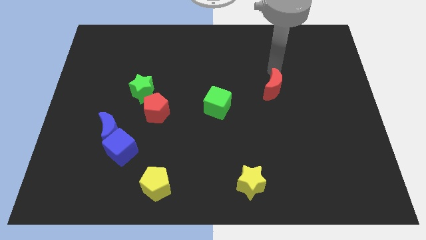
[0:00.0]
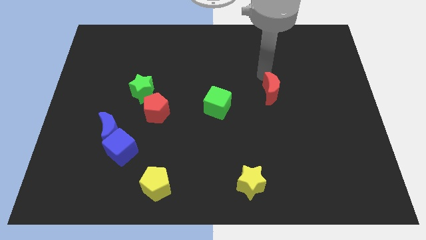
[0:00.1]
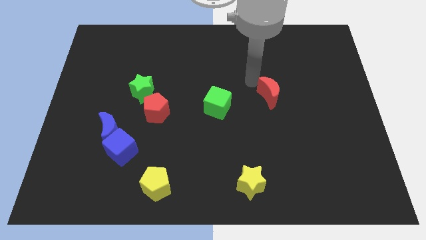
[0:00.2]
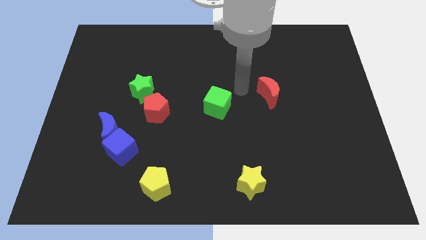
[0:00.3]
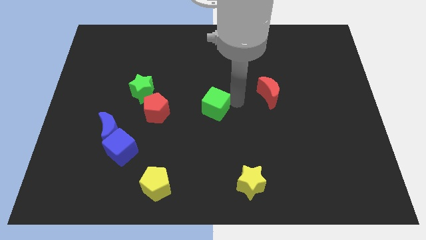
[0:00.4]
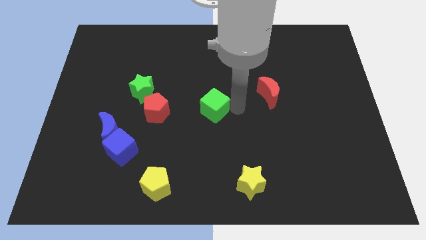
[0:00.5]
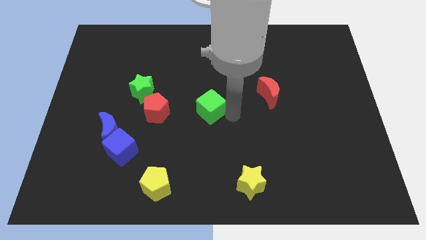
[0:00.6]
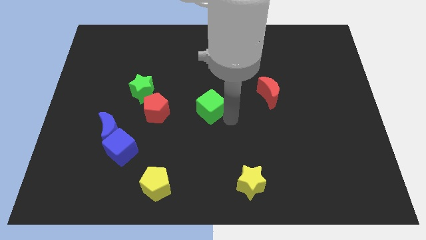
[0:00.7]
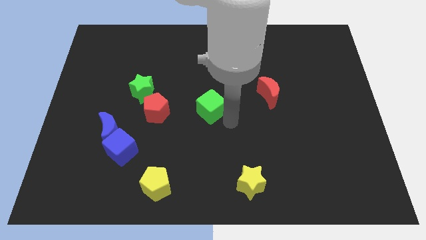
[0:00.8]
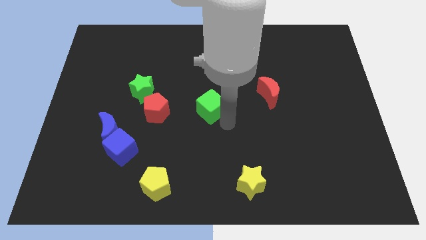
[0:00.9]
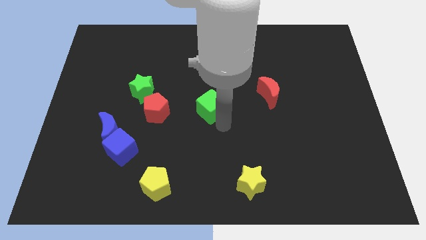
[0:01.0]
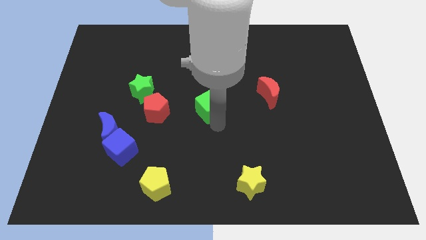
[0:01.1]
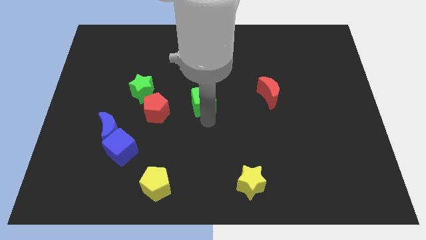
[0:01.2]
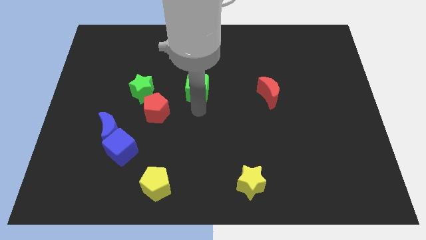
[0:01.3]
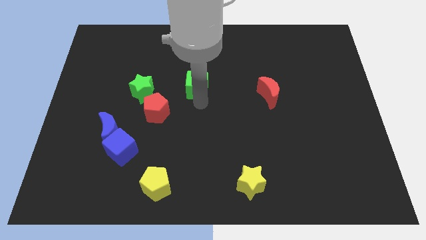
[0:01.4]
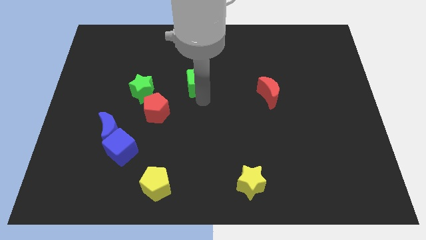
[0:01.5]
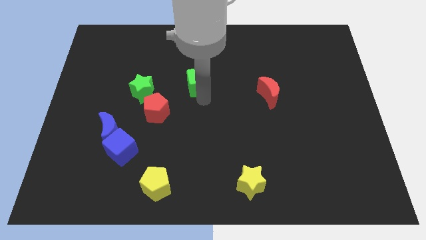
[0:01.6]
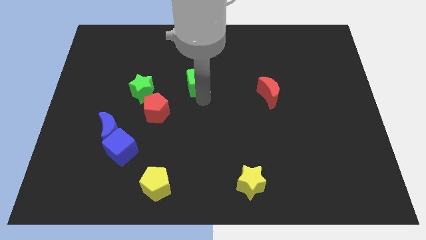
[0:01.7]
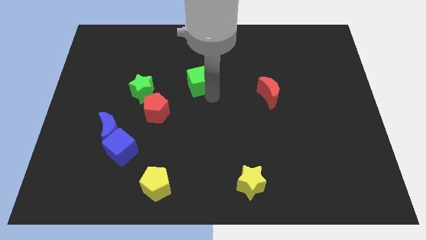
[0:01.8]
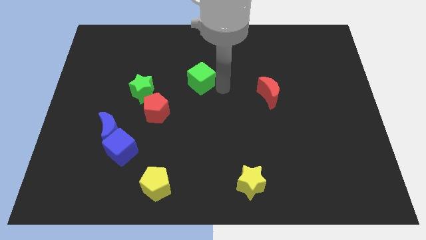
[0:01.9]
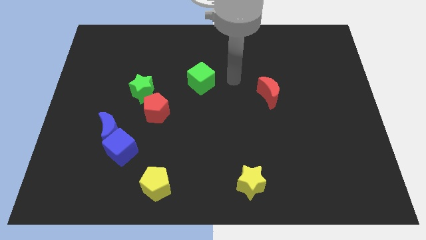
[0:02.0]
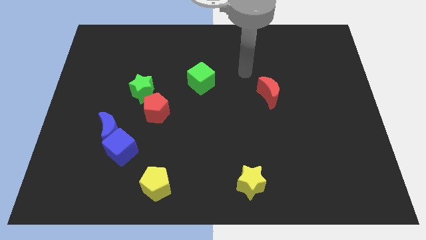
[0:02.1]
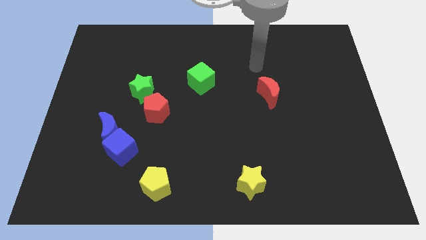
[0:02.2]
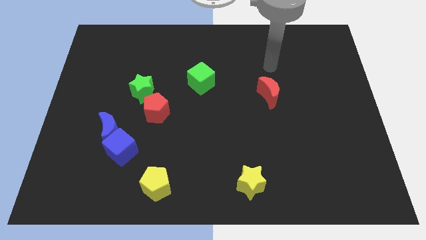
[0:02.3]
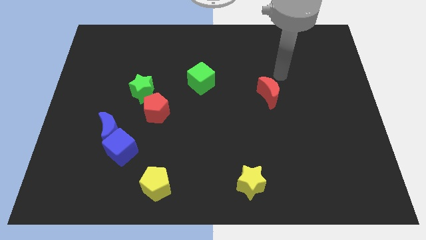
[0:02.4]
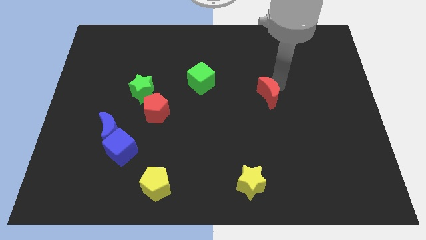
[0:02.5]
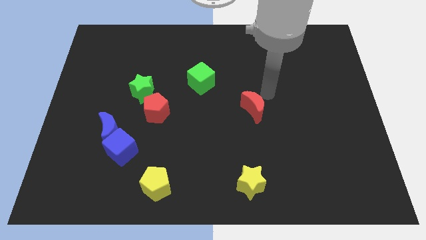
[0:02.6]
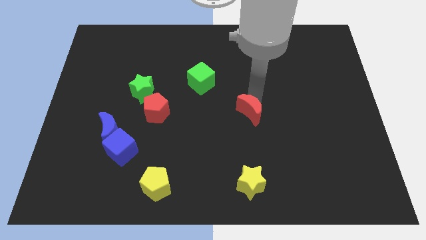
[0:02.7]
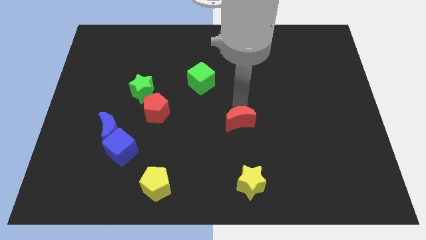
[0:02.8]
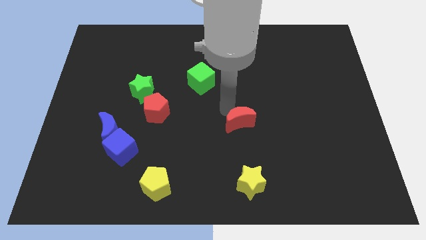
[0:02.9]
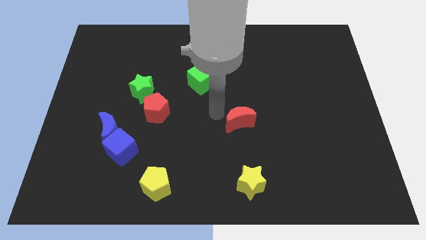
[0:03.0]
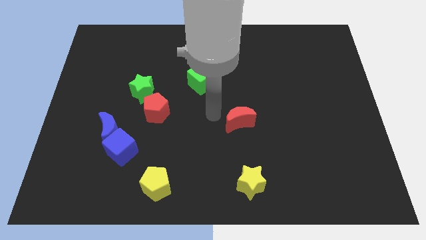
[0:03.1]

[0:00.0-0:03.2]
place the red moon above the yellow star

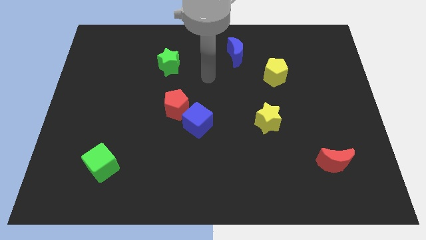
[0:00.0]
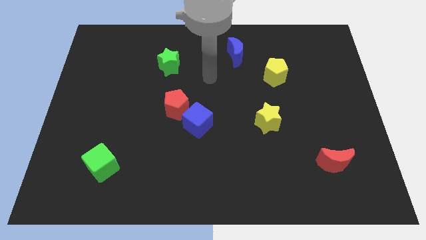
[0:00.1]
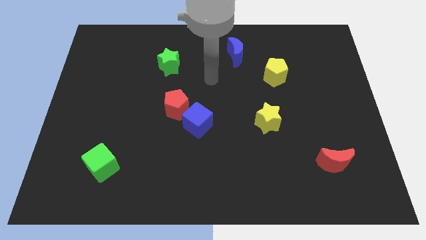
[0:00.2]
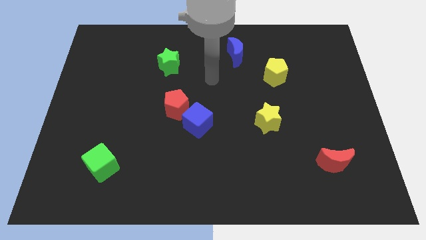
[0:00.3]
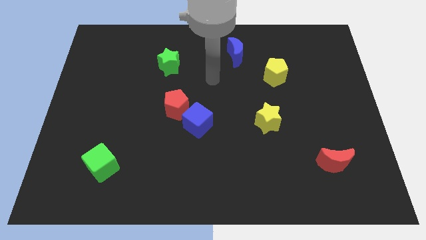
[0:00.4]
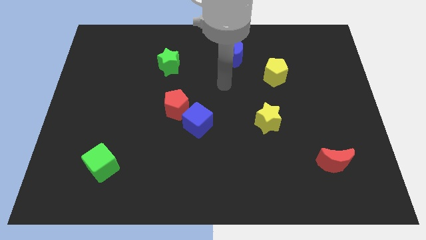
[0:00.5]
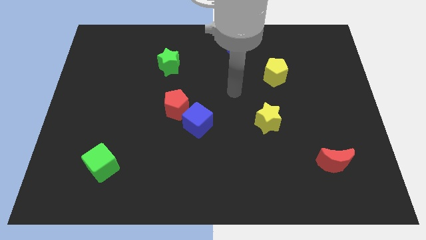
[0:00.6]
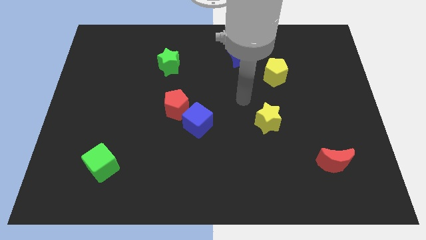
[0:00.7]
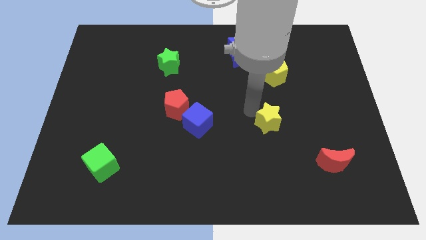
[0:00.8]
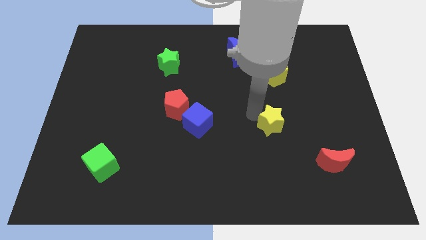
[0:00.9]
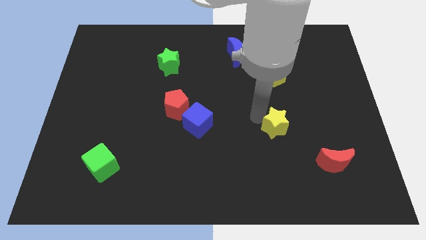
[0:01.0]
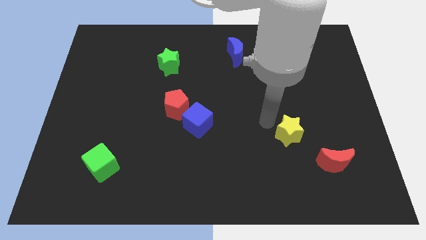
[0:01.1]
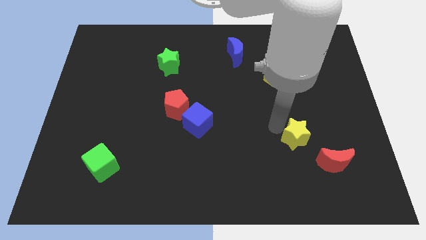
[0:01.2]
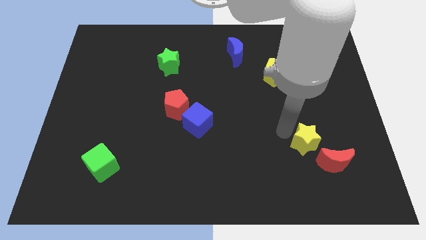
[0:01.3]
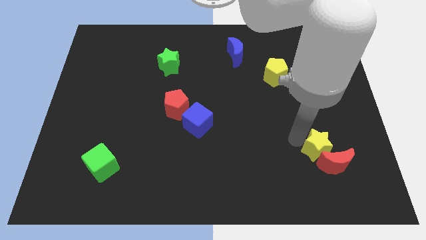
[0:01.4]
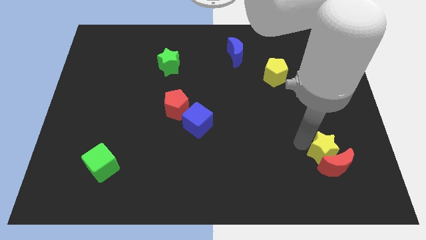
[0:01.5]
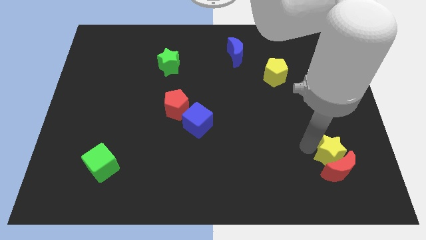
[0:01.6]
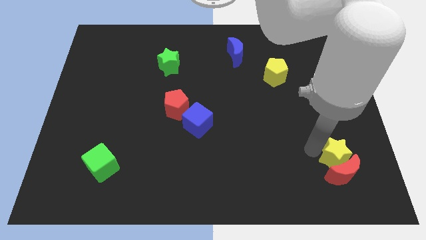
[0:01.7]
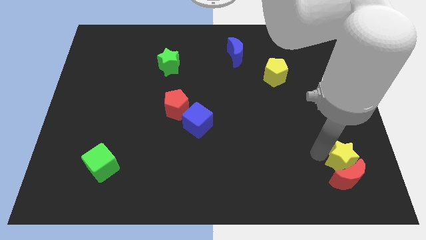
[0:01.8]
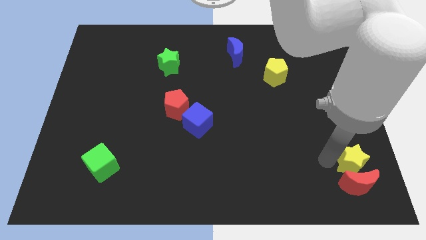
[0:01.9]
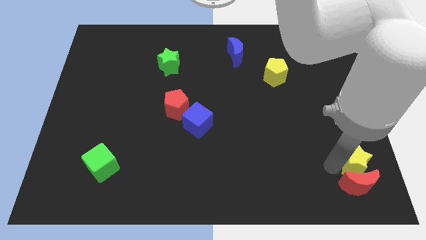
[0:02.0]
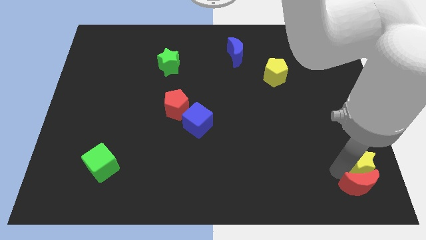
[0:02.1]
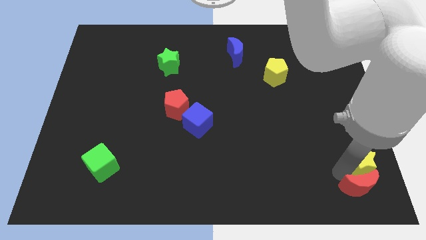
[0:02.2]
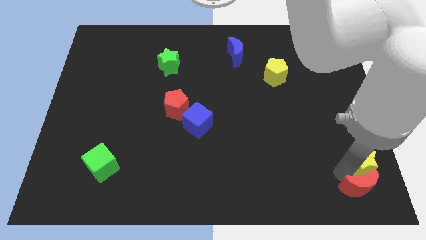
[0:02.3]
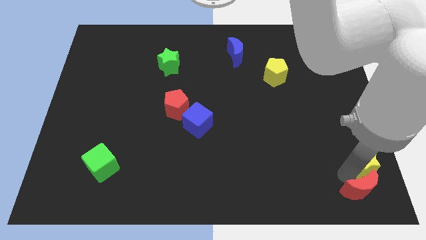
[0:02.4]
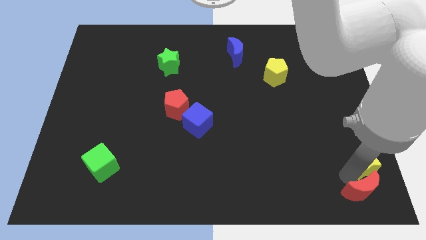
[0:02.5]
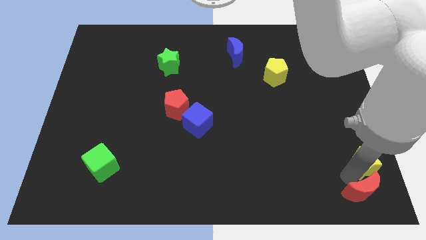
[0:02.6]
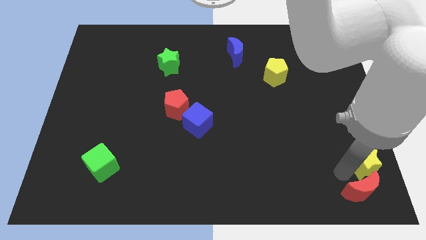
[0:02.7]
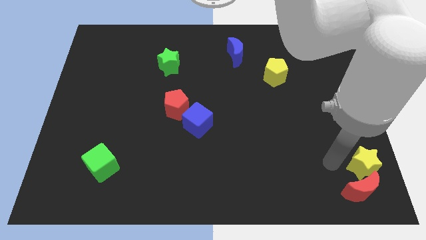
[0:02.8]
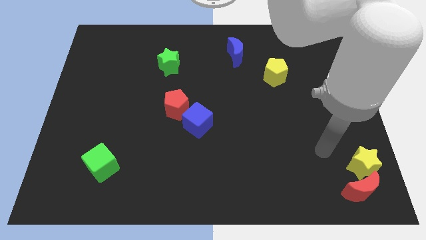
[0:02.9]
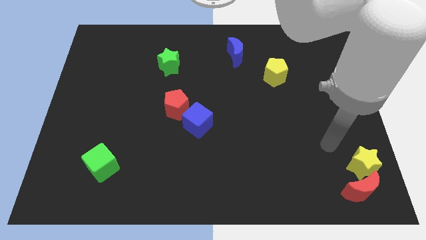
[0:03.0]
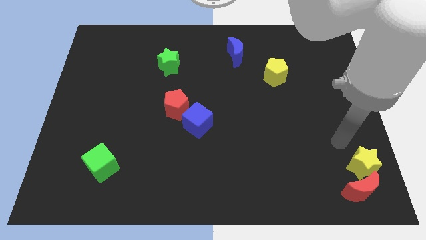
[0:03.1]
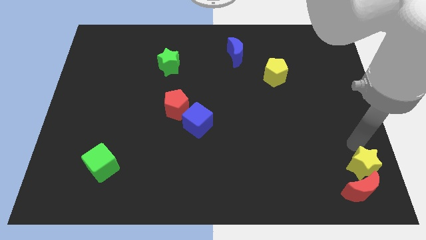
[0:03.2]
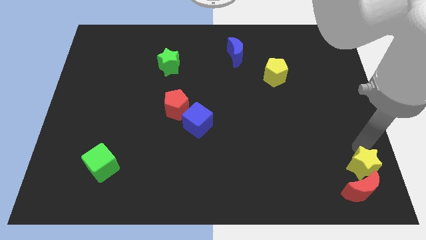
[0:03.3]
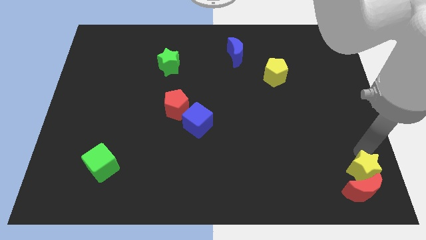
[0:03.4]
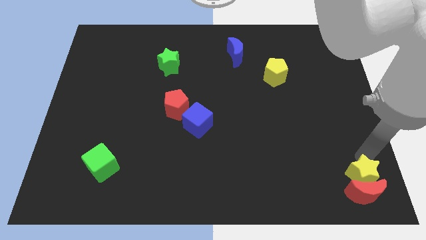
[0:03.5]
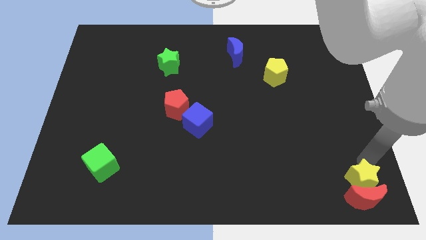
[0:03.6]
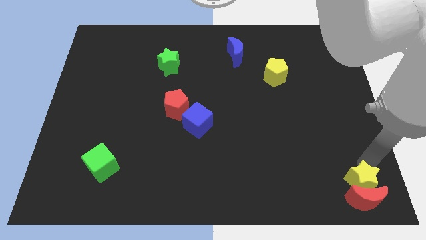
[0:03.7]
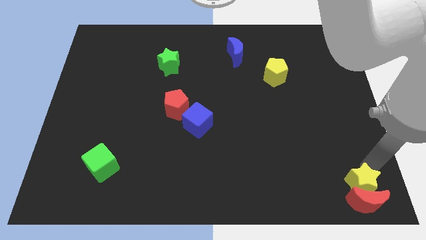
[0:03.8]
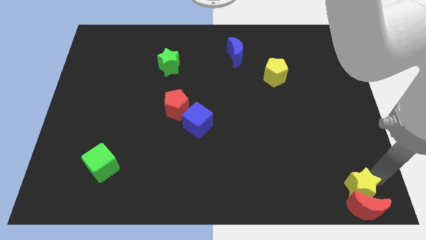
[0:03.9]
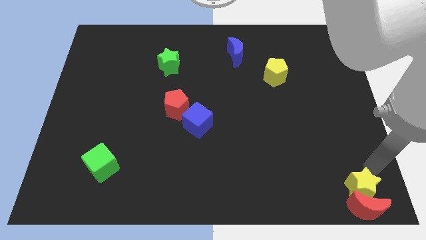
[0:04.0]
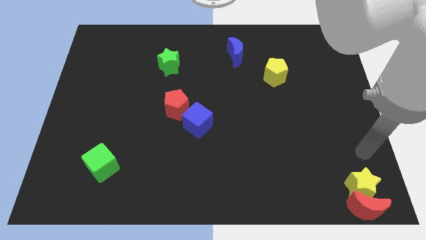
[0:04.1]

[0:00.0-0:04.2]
move the yellow star and red moon towards the right bottom of the board

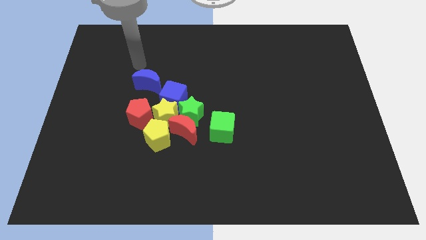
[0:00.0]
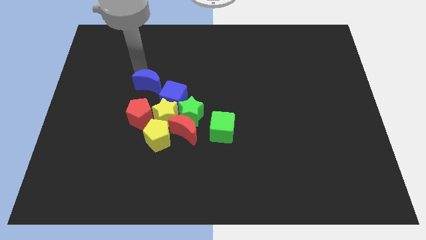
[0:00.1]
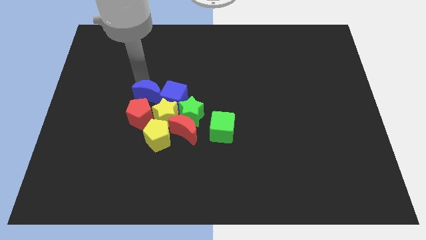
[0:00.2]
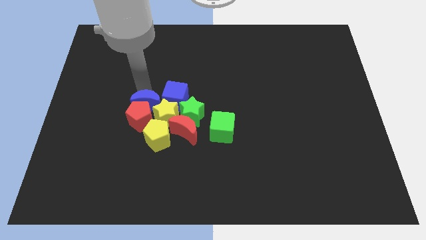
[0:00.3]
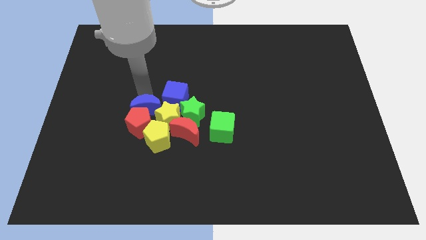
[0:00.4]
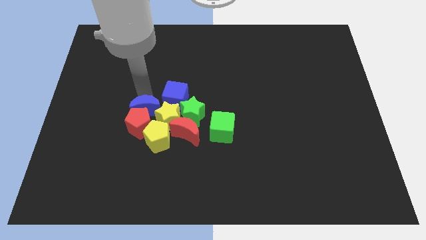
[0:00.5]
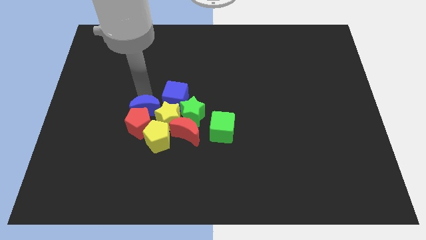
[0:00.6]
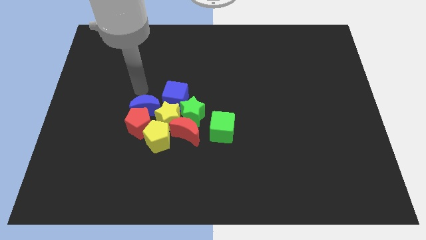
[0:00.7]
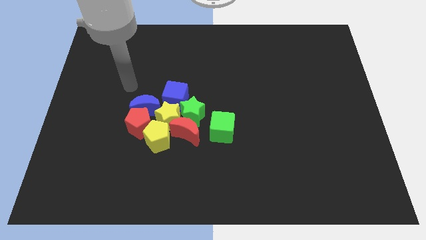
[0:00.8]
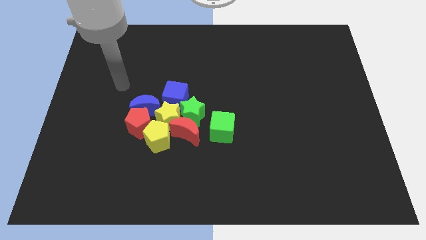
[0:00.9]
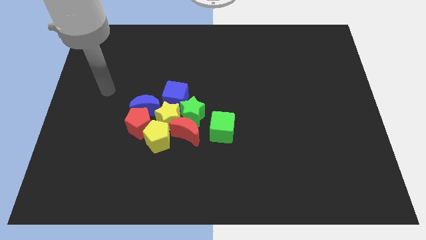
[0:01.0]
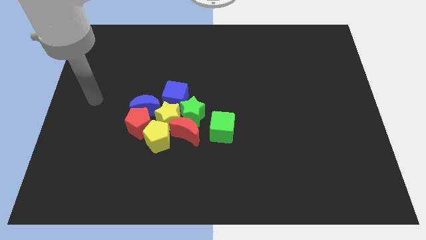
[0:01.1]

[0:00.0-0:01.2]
push the blue crescent into the red pentagon

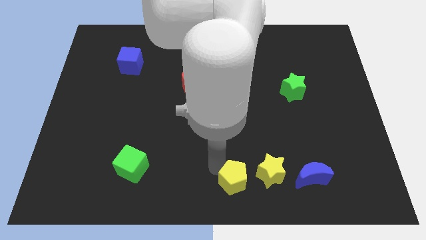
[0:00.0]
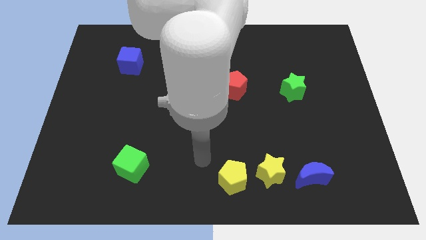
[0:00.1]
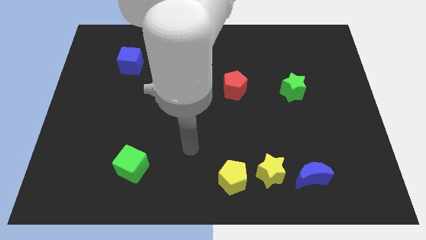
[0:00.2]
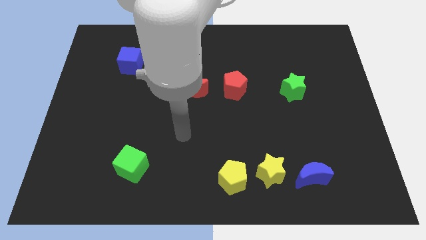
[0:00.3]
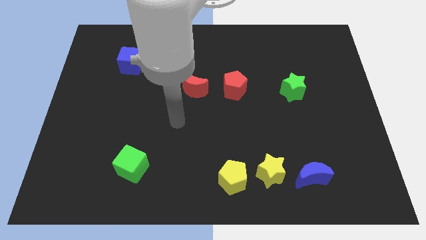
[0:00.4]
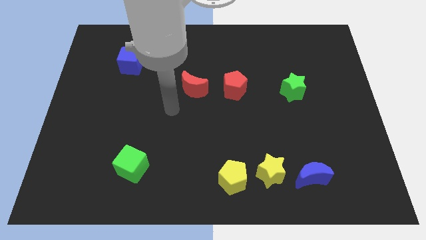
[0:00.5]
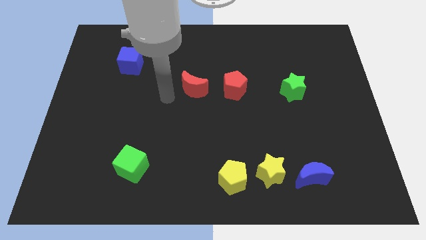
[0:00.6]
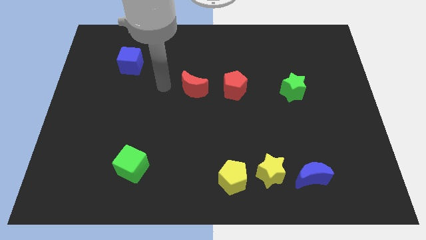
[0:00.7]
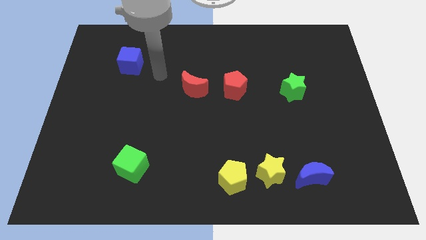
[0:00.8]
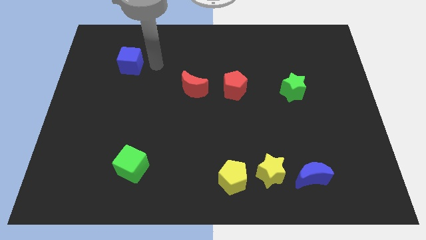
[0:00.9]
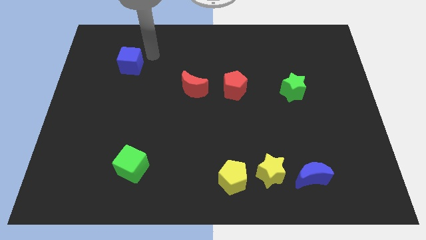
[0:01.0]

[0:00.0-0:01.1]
go away from the yellow pentagon
